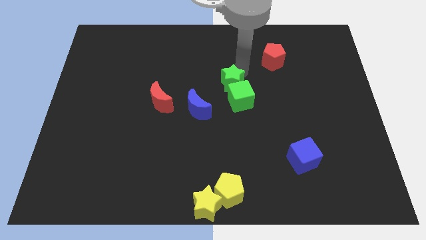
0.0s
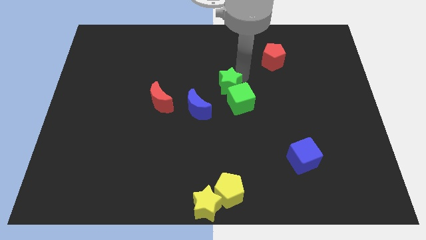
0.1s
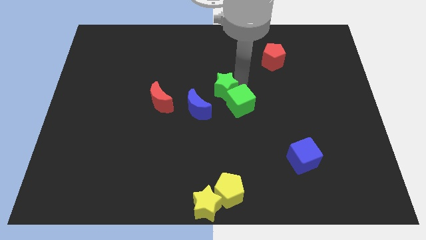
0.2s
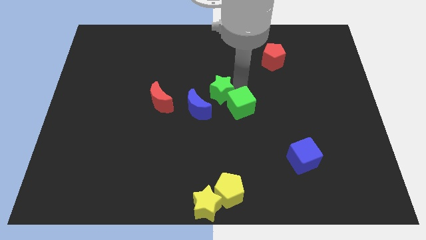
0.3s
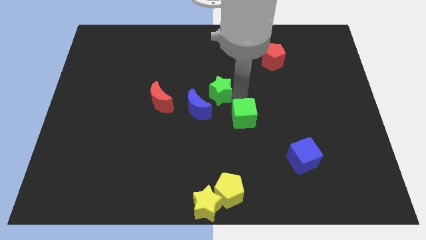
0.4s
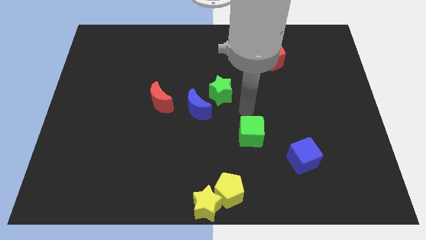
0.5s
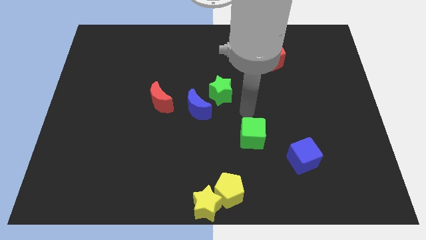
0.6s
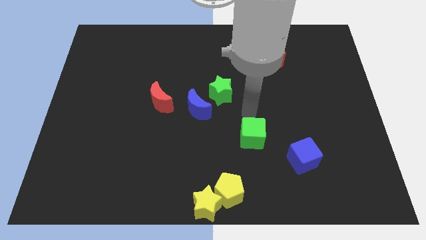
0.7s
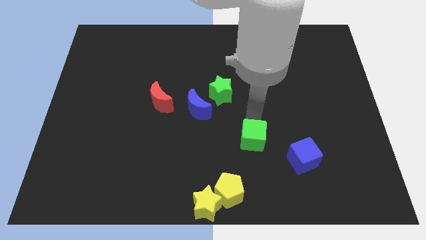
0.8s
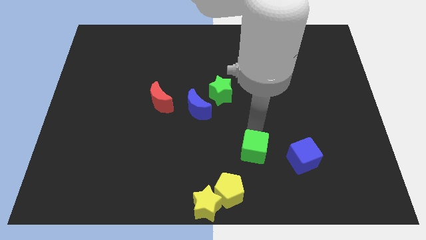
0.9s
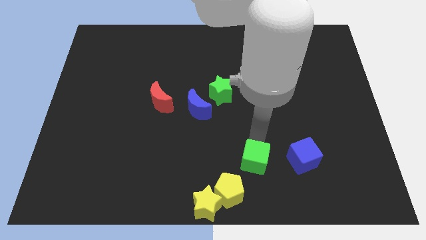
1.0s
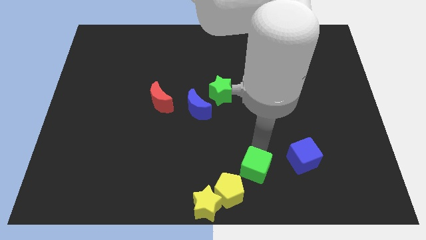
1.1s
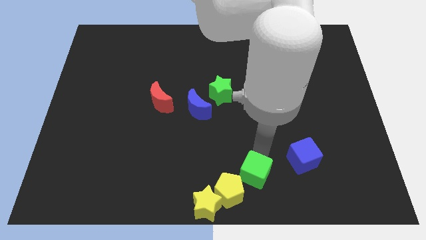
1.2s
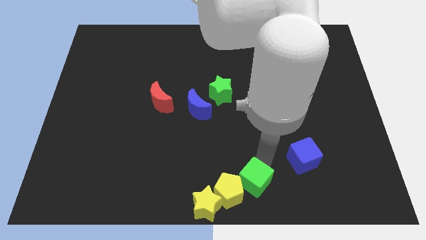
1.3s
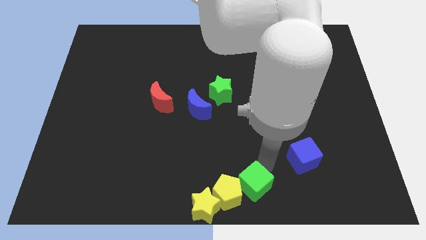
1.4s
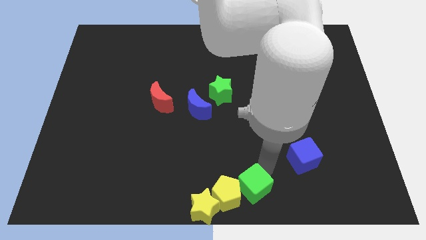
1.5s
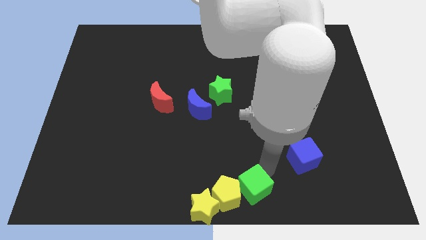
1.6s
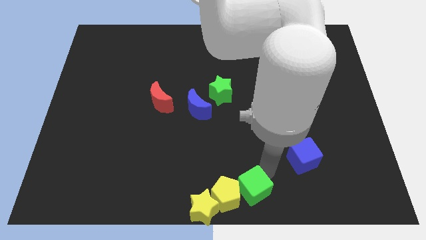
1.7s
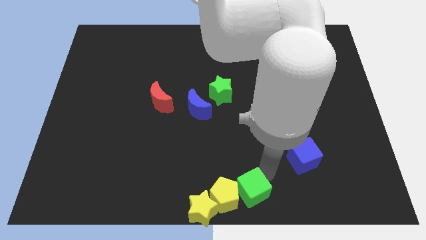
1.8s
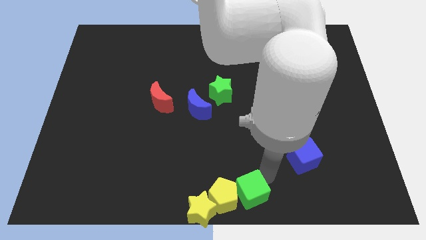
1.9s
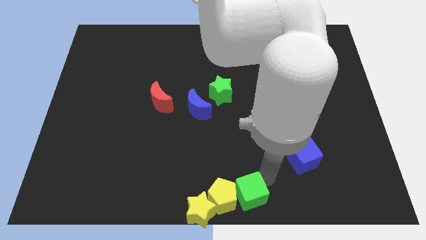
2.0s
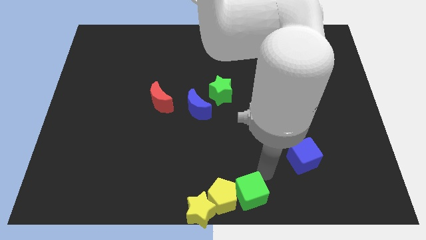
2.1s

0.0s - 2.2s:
move the green cube into the yellow pentagon

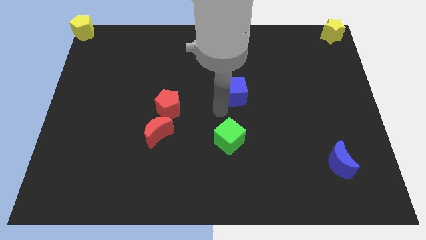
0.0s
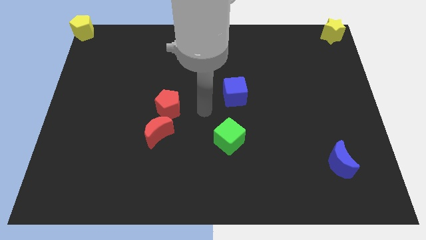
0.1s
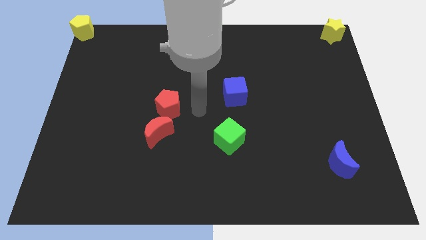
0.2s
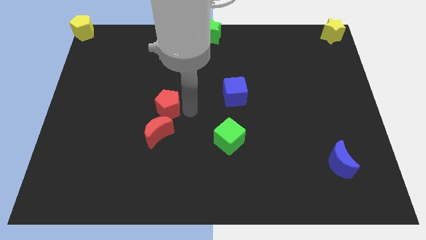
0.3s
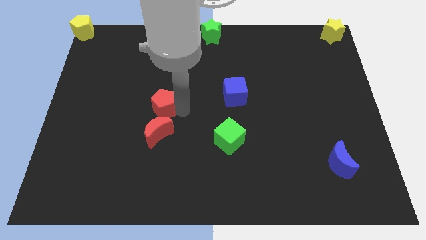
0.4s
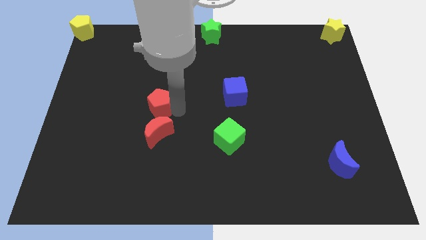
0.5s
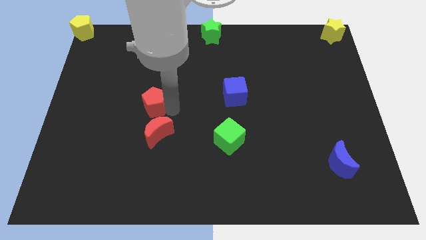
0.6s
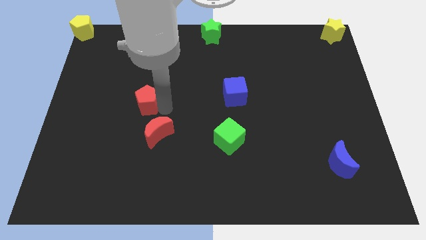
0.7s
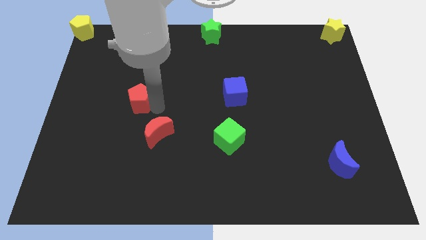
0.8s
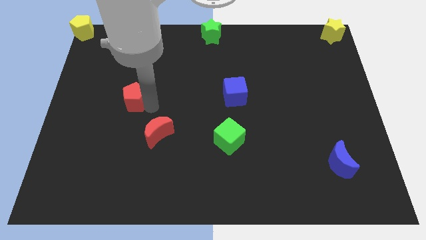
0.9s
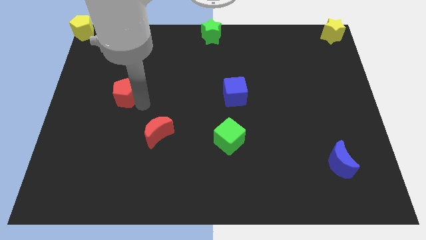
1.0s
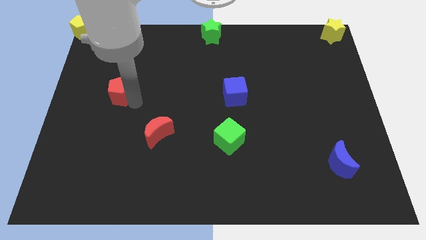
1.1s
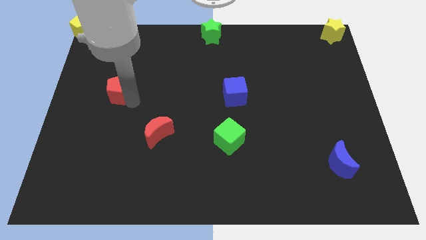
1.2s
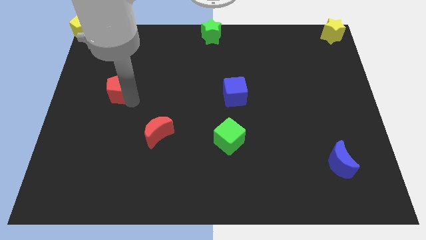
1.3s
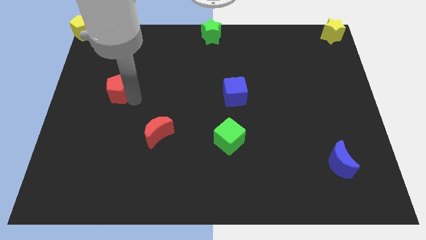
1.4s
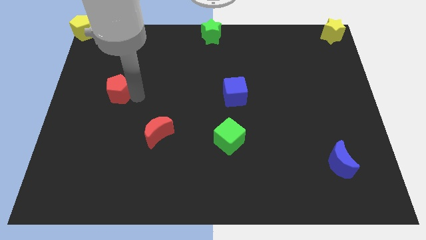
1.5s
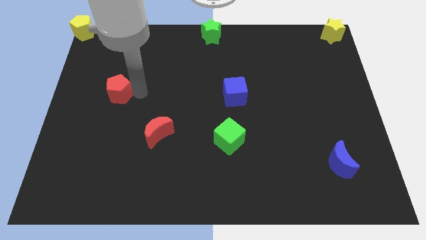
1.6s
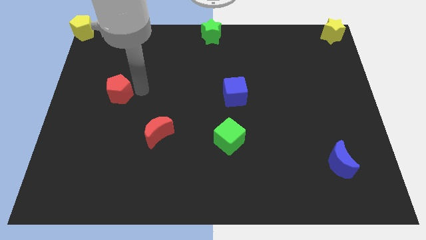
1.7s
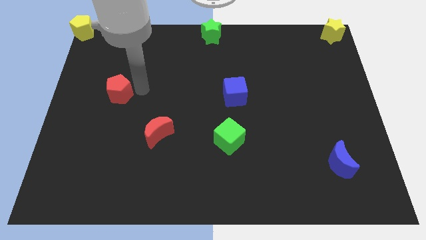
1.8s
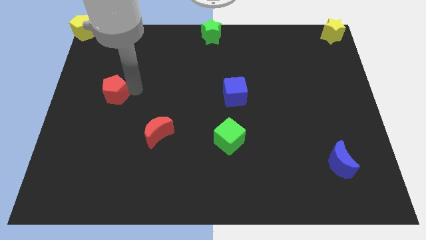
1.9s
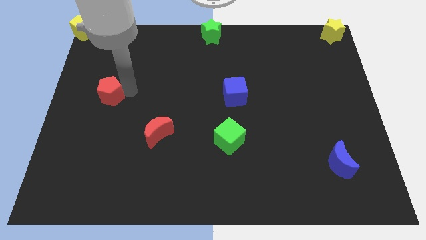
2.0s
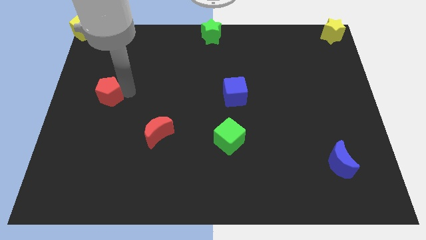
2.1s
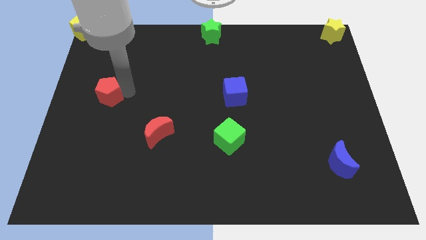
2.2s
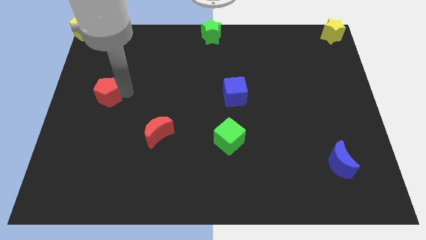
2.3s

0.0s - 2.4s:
move the red pentagon to the left

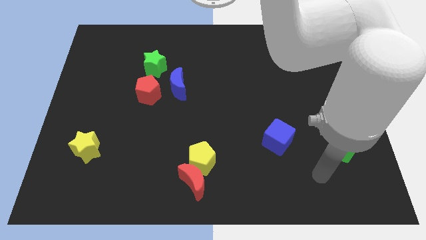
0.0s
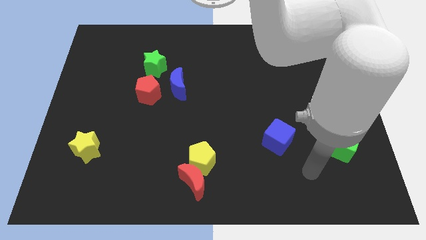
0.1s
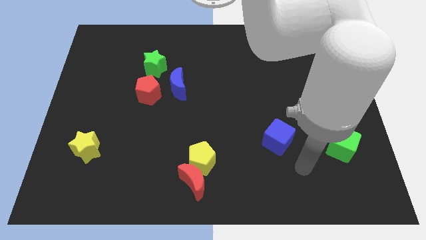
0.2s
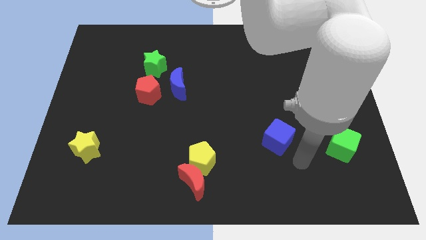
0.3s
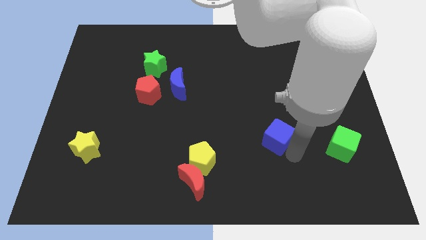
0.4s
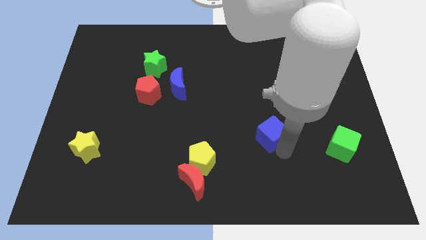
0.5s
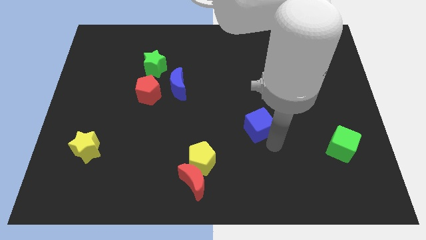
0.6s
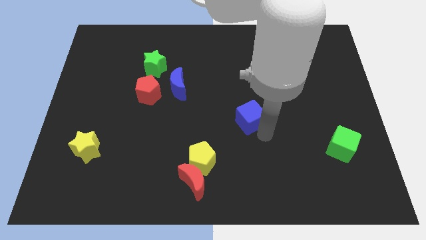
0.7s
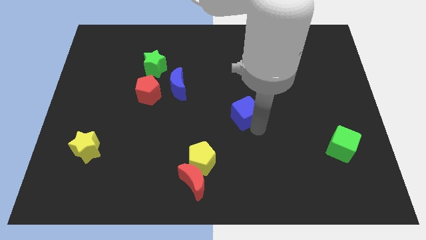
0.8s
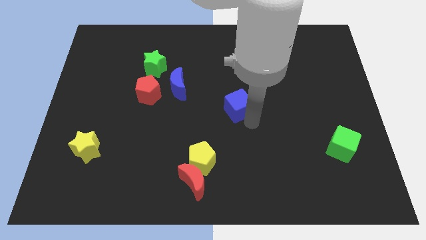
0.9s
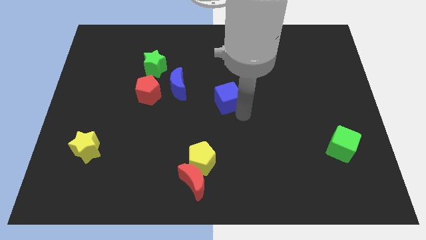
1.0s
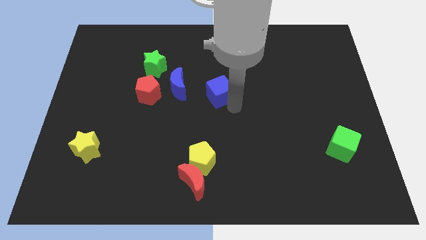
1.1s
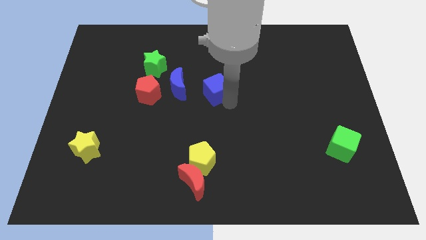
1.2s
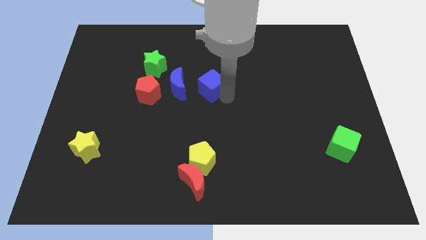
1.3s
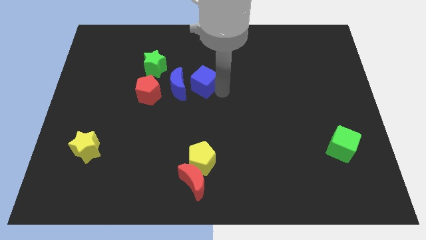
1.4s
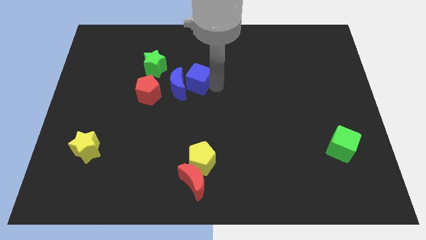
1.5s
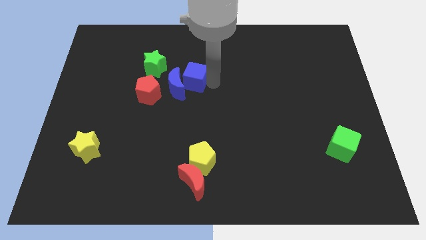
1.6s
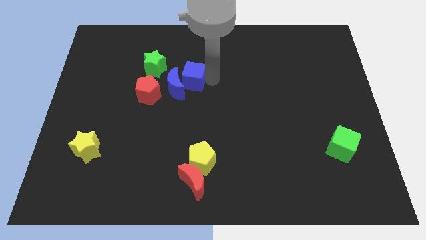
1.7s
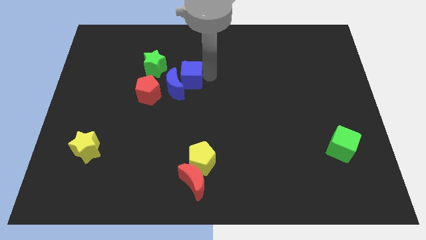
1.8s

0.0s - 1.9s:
move the blue cube to the right of blue moon

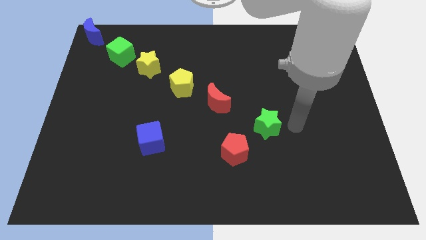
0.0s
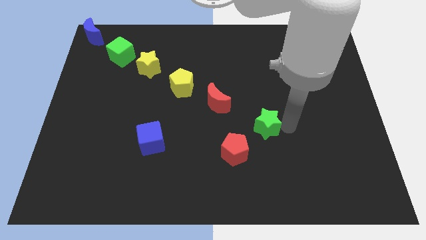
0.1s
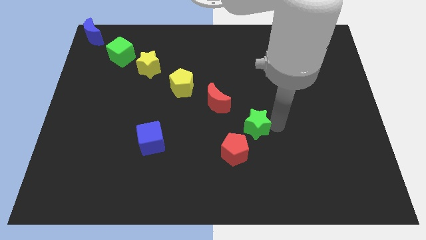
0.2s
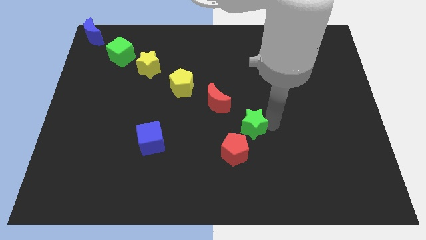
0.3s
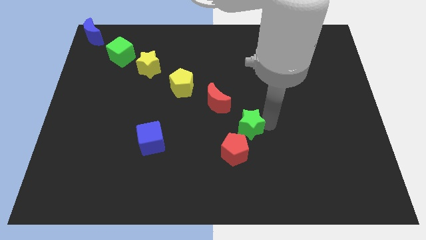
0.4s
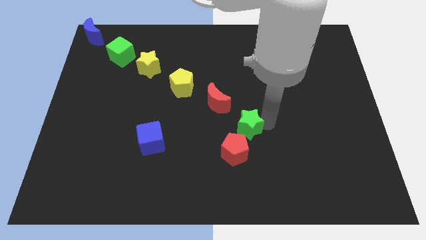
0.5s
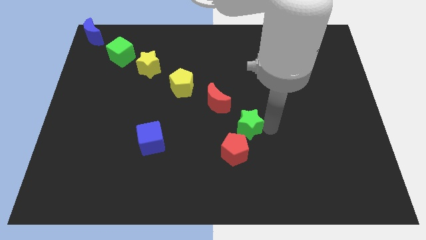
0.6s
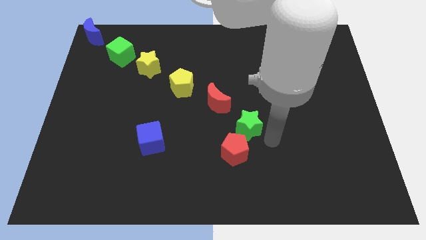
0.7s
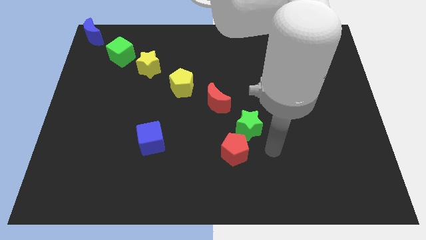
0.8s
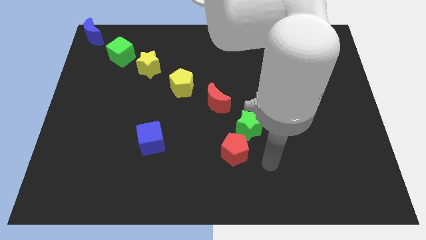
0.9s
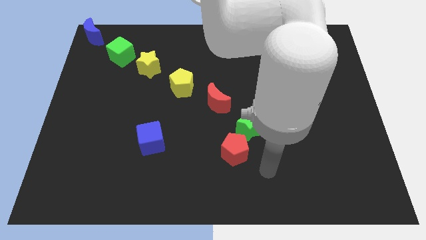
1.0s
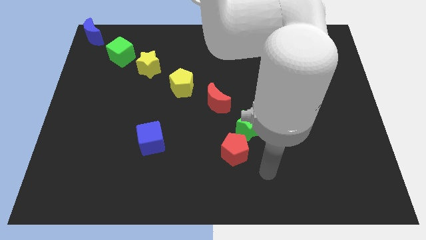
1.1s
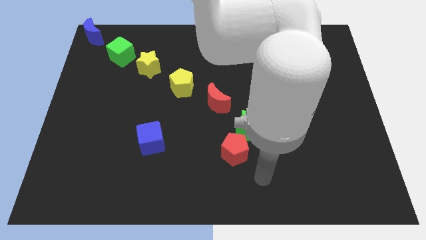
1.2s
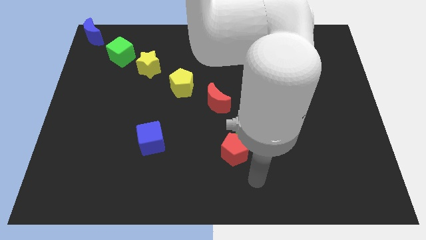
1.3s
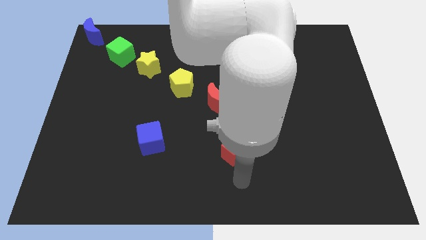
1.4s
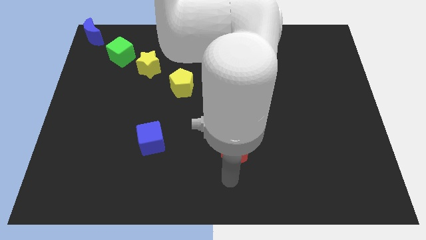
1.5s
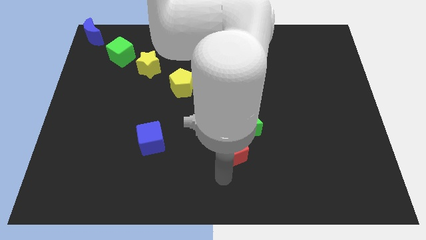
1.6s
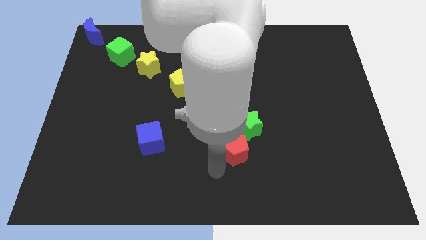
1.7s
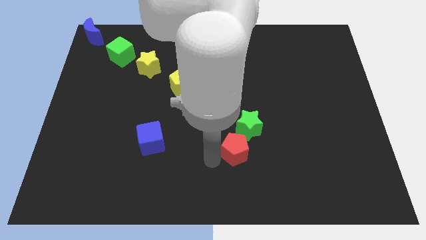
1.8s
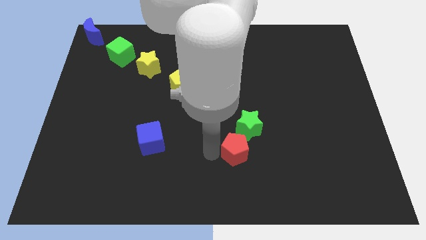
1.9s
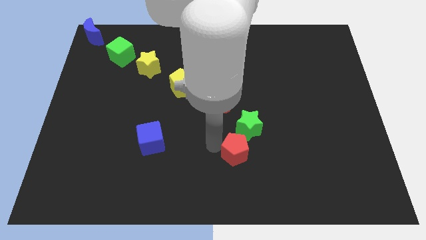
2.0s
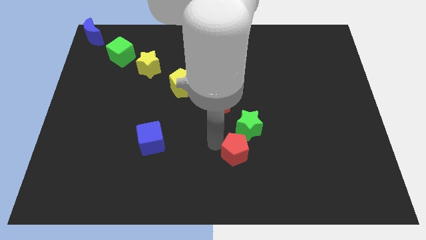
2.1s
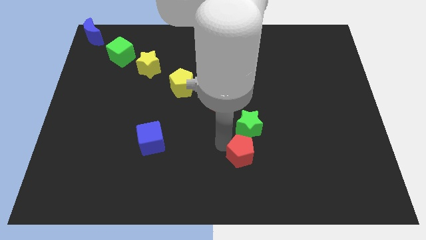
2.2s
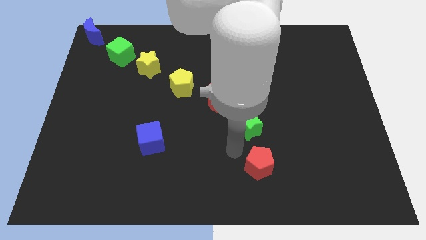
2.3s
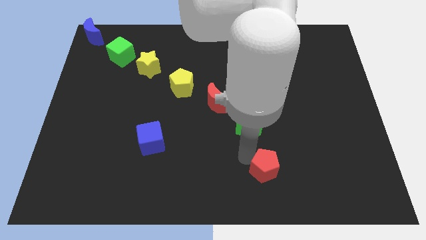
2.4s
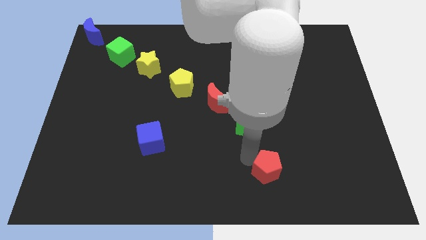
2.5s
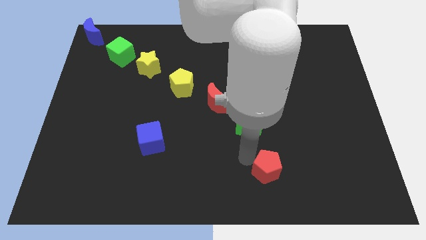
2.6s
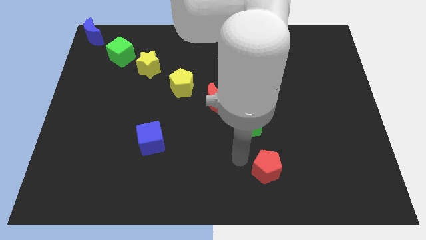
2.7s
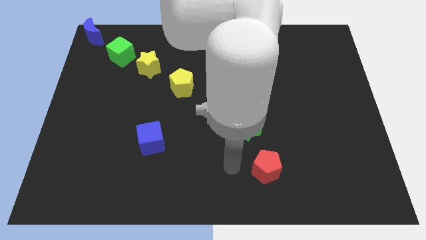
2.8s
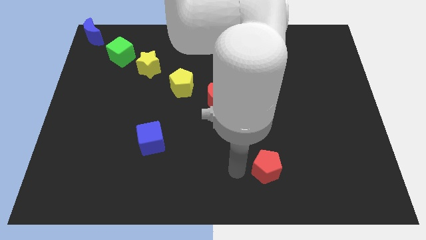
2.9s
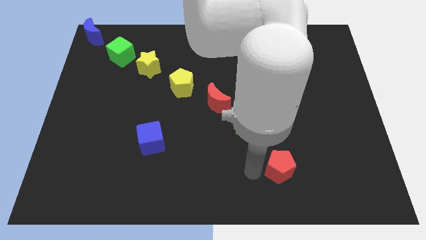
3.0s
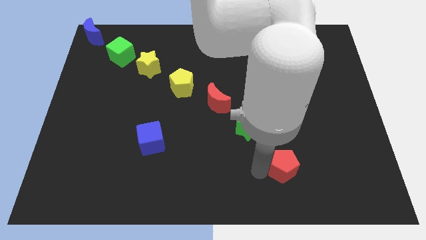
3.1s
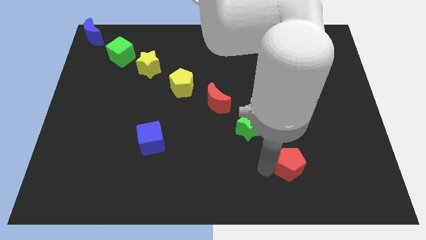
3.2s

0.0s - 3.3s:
move the red pentagon to the bottom of the green star
